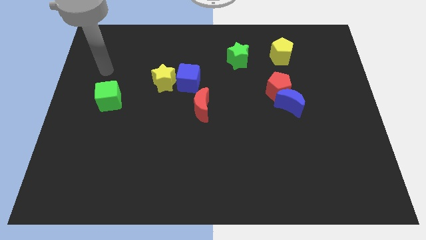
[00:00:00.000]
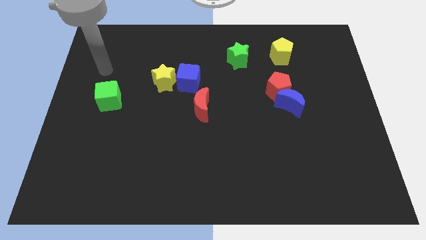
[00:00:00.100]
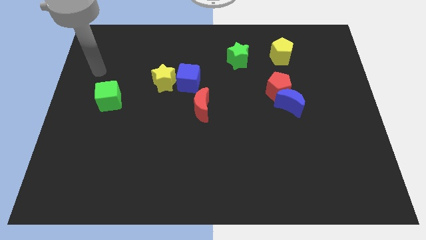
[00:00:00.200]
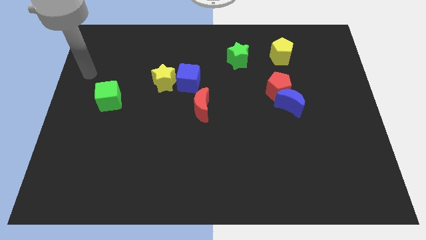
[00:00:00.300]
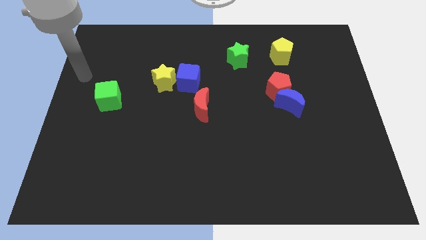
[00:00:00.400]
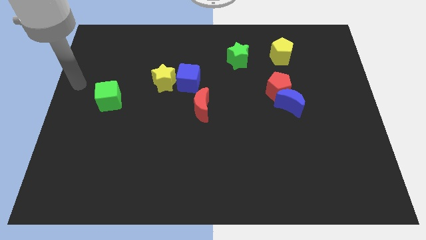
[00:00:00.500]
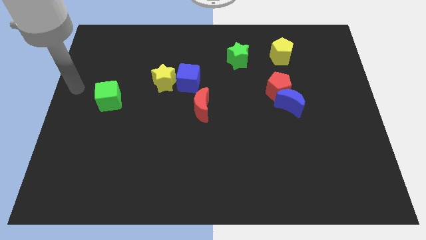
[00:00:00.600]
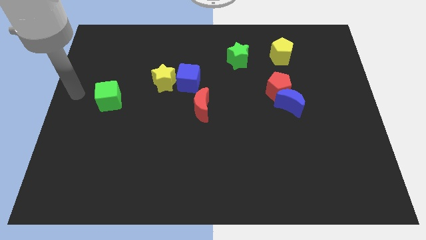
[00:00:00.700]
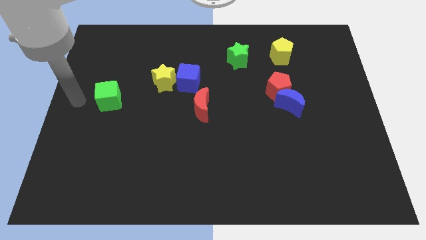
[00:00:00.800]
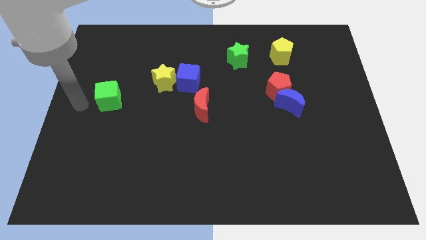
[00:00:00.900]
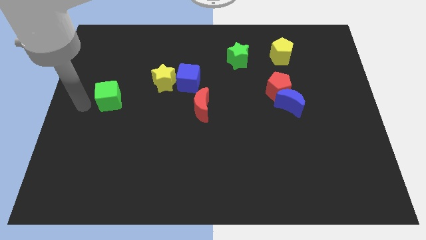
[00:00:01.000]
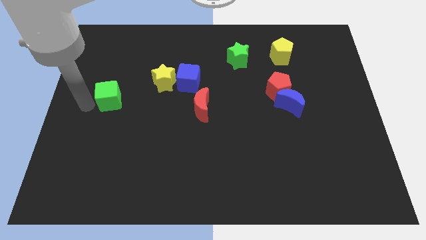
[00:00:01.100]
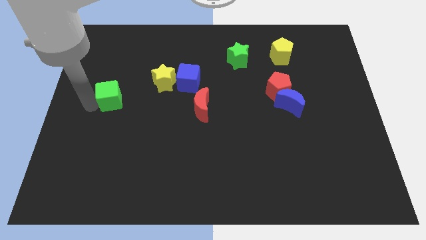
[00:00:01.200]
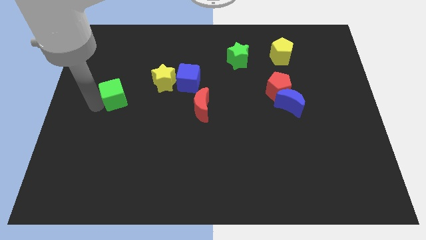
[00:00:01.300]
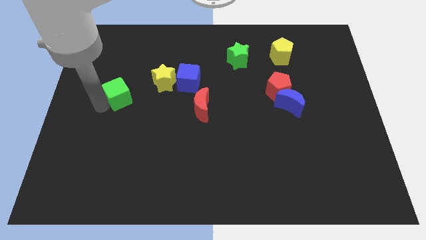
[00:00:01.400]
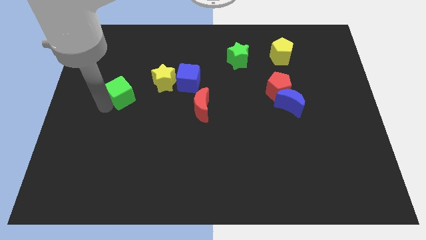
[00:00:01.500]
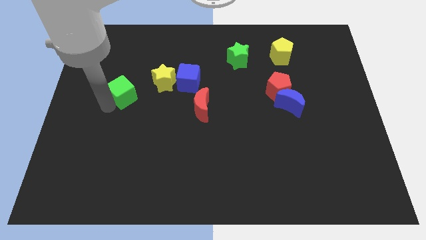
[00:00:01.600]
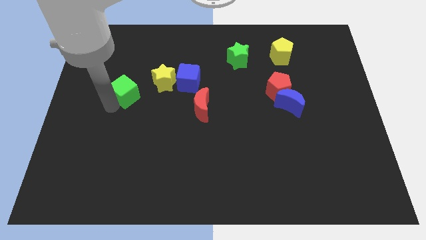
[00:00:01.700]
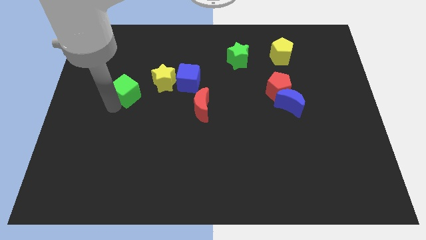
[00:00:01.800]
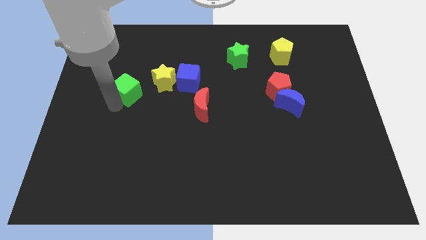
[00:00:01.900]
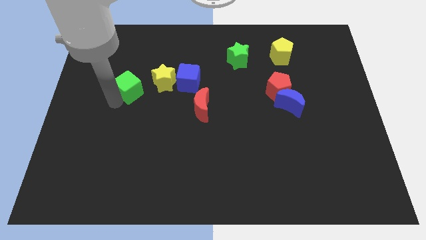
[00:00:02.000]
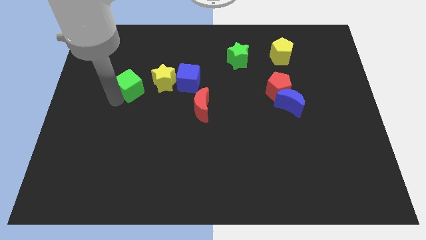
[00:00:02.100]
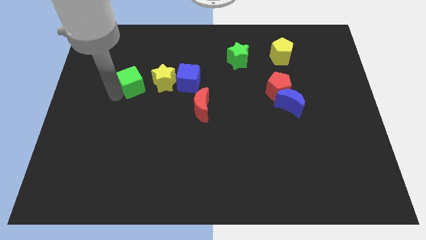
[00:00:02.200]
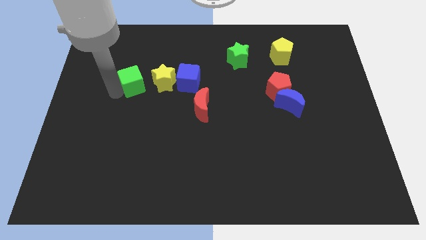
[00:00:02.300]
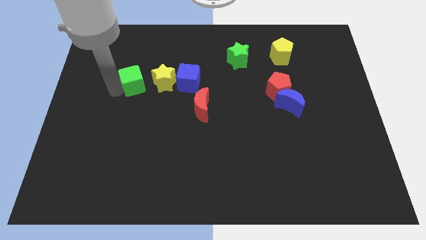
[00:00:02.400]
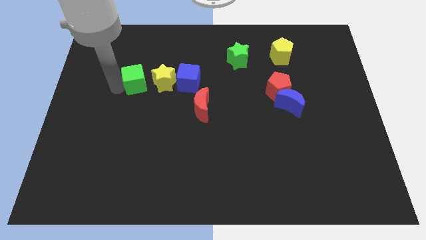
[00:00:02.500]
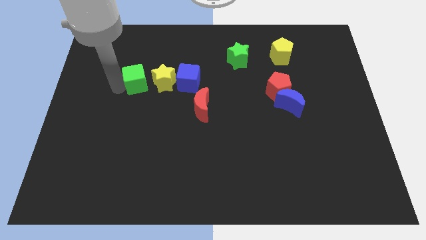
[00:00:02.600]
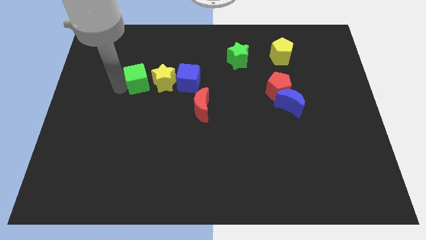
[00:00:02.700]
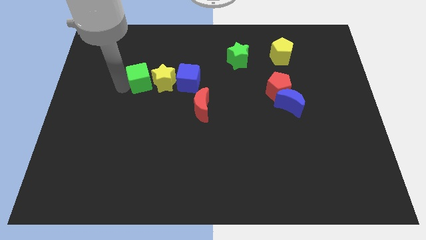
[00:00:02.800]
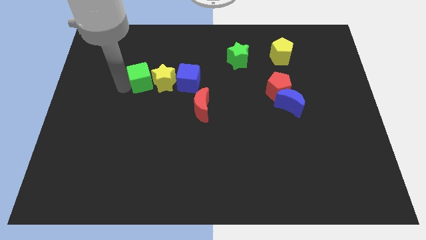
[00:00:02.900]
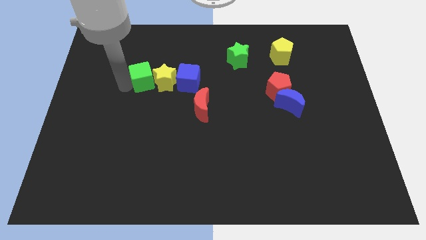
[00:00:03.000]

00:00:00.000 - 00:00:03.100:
slide the green cube next to the yellow star

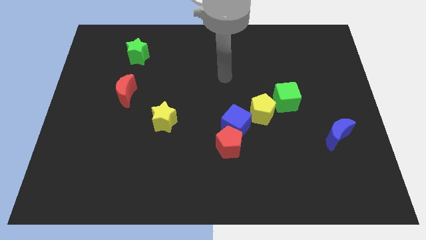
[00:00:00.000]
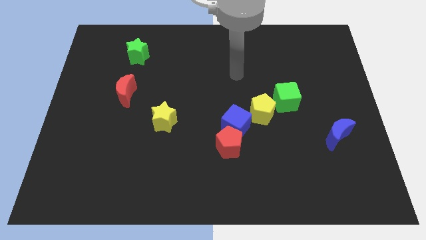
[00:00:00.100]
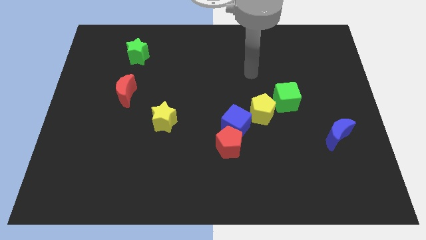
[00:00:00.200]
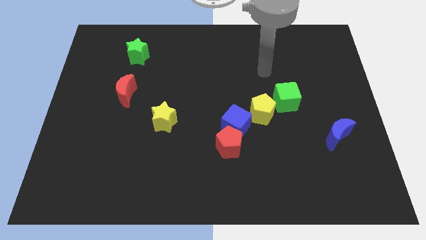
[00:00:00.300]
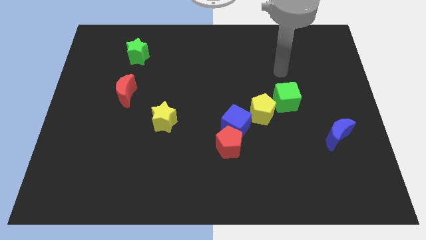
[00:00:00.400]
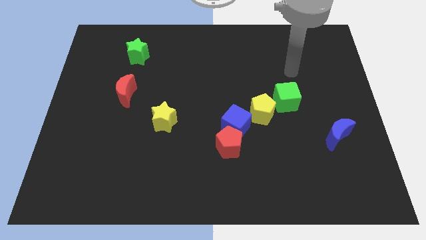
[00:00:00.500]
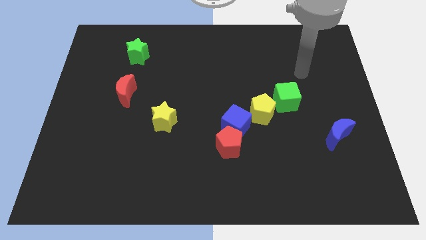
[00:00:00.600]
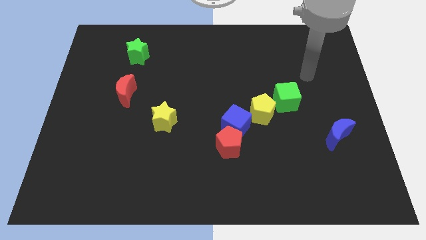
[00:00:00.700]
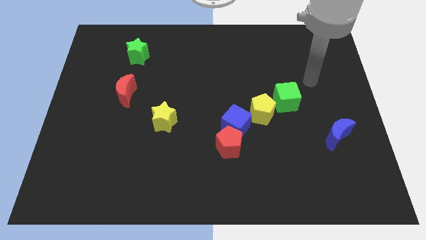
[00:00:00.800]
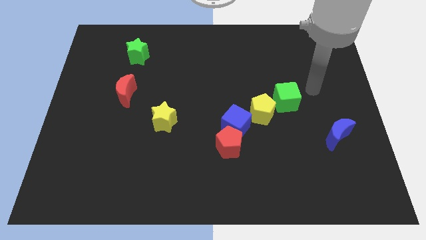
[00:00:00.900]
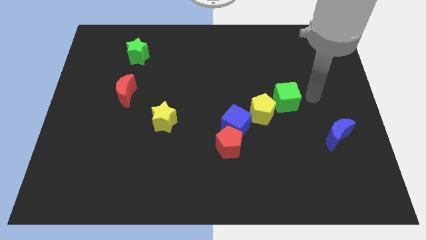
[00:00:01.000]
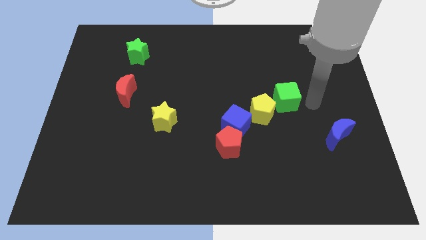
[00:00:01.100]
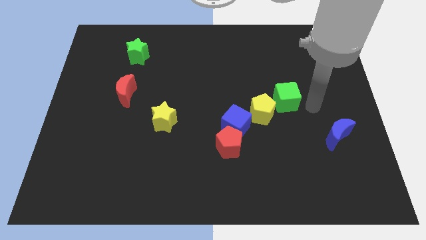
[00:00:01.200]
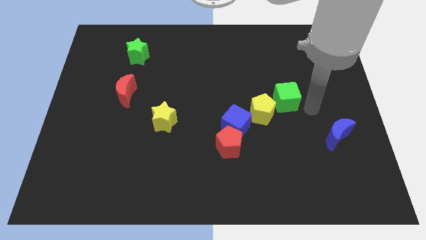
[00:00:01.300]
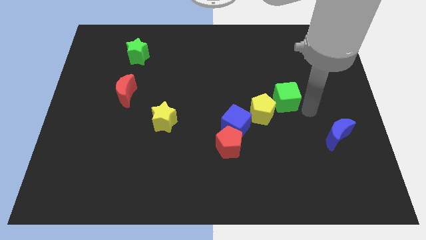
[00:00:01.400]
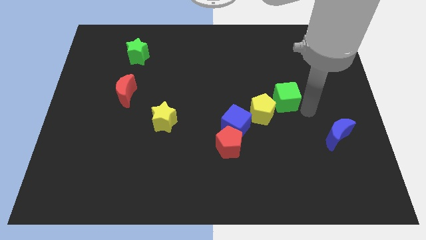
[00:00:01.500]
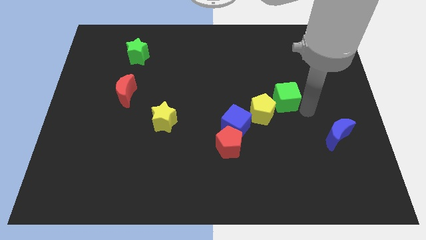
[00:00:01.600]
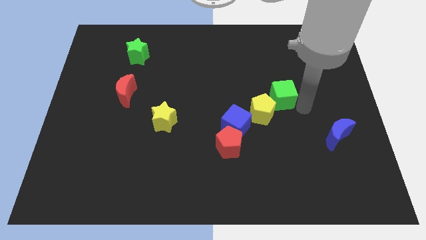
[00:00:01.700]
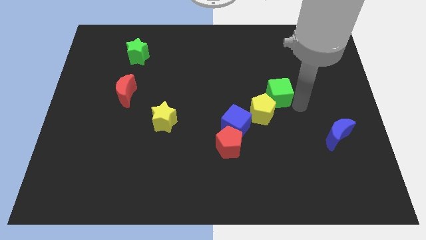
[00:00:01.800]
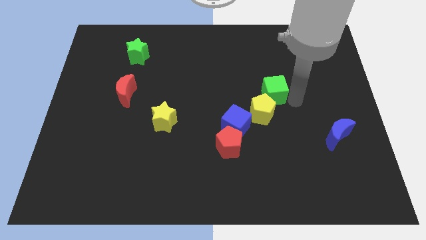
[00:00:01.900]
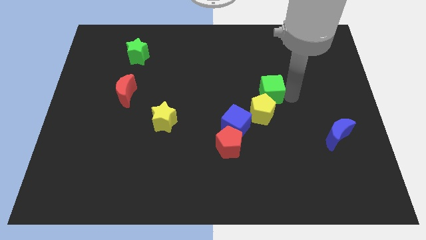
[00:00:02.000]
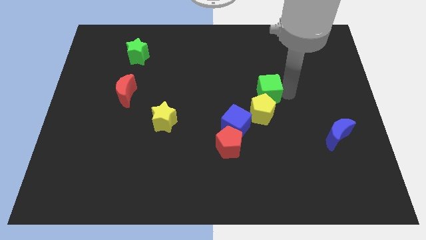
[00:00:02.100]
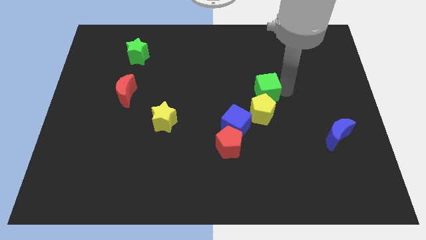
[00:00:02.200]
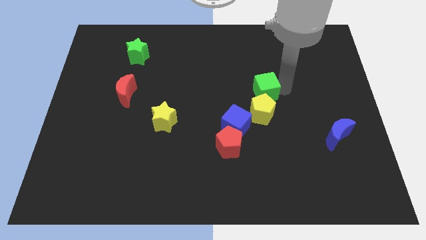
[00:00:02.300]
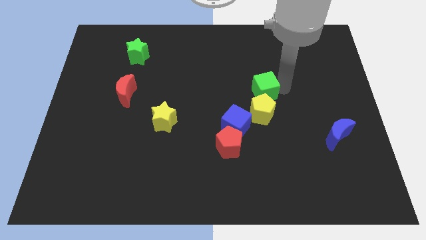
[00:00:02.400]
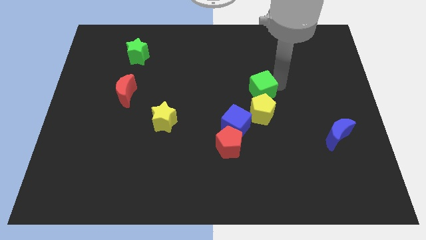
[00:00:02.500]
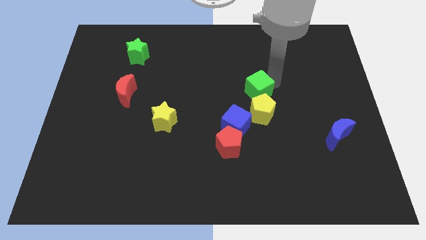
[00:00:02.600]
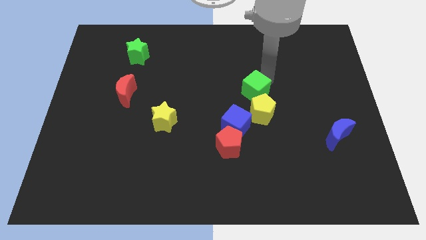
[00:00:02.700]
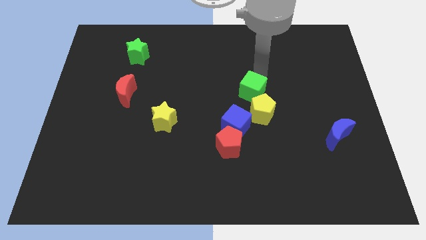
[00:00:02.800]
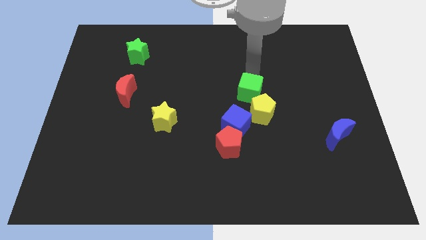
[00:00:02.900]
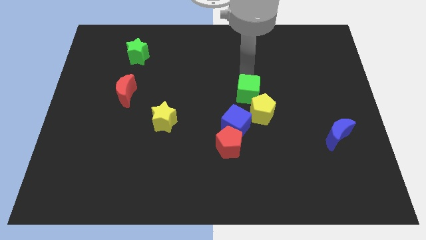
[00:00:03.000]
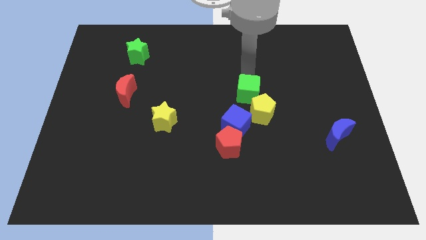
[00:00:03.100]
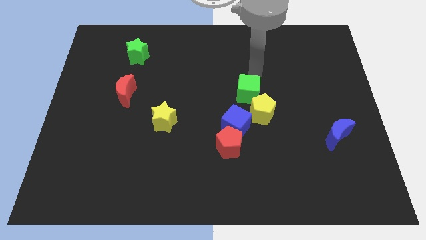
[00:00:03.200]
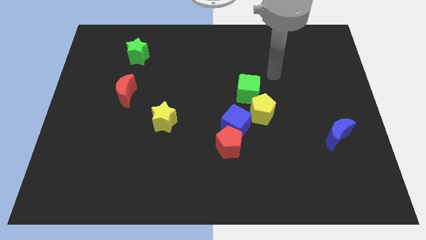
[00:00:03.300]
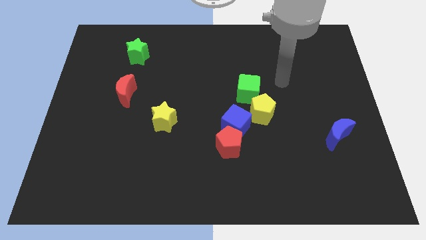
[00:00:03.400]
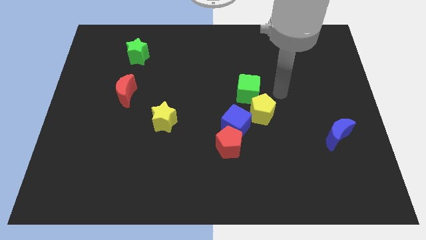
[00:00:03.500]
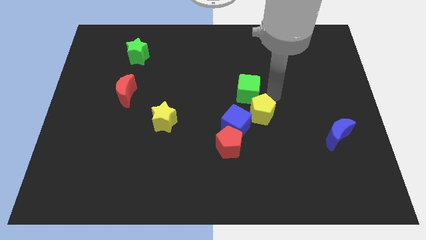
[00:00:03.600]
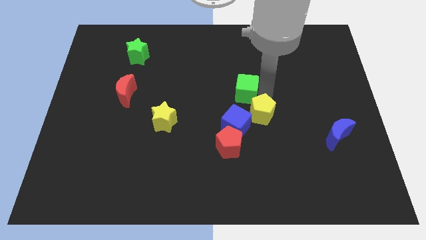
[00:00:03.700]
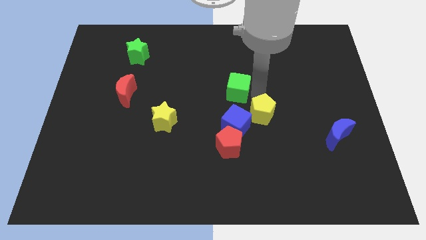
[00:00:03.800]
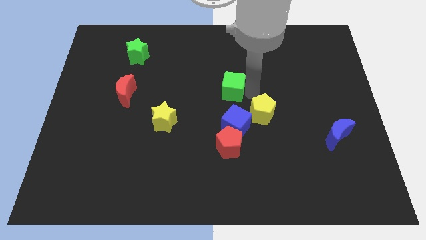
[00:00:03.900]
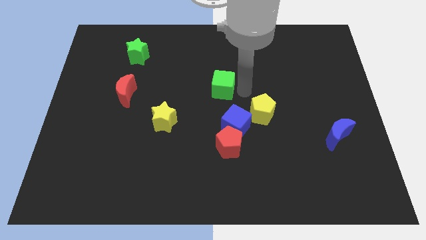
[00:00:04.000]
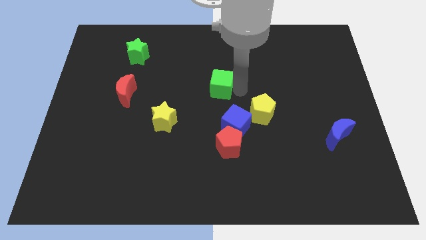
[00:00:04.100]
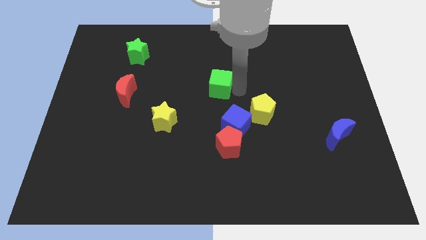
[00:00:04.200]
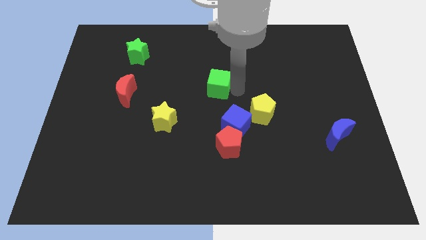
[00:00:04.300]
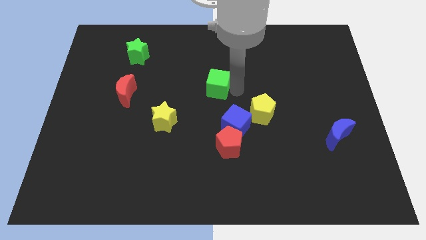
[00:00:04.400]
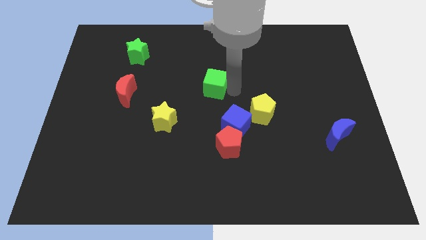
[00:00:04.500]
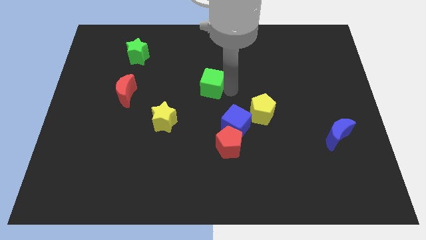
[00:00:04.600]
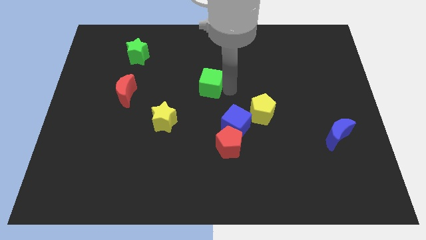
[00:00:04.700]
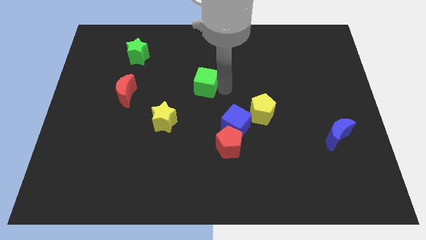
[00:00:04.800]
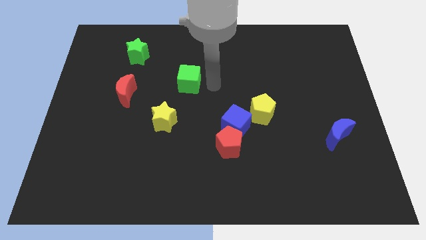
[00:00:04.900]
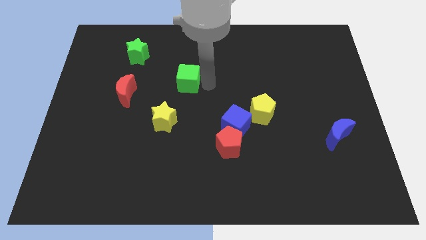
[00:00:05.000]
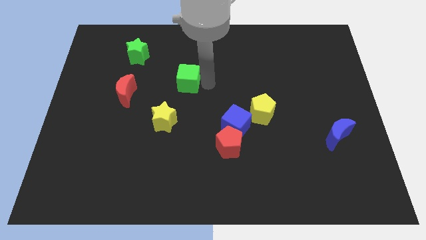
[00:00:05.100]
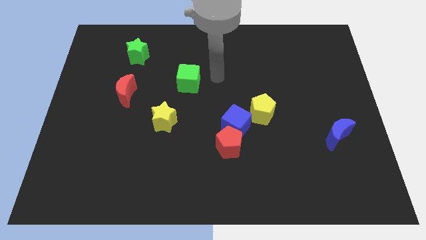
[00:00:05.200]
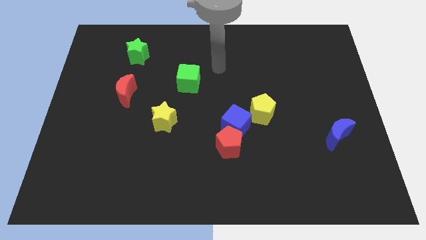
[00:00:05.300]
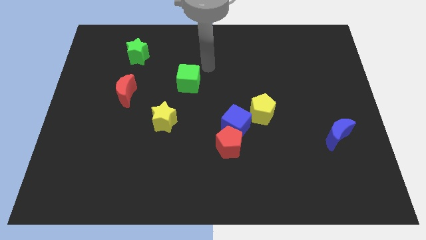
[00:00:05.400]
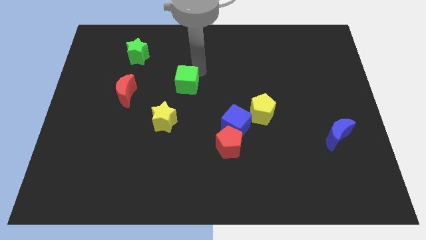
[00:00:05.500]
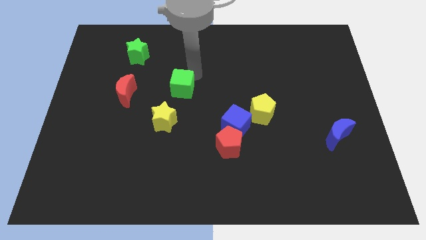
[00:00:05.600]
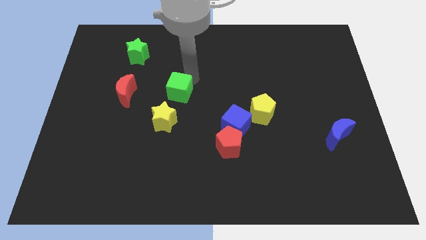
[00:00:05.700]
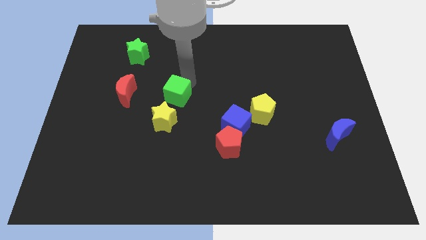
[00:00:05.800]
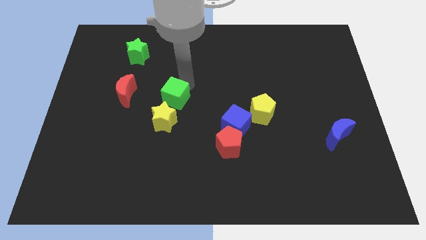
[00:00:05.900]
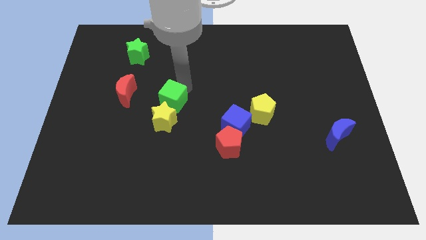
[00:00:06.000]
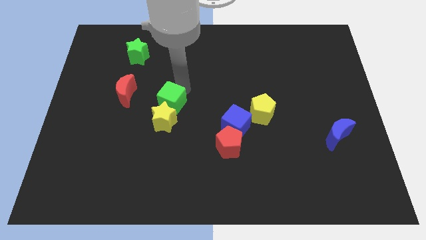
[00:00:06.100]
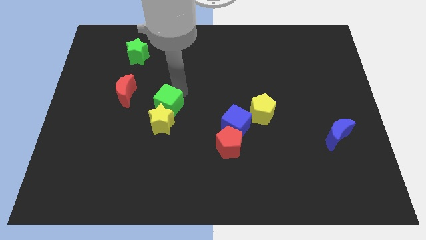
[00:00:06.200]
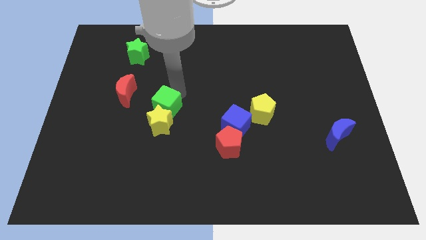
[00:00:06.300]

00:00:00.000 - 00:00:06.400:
put the green cube close to the yellow star
